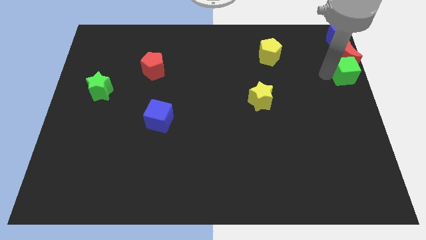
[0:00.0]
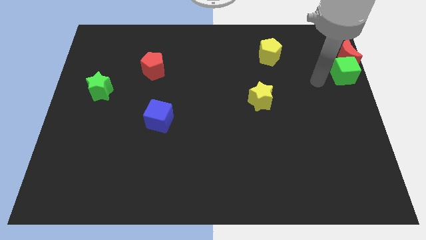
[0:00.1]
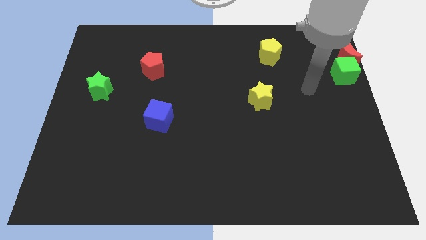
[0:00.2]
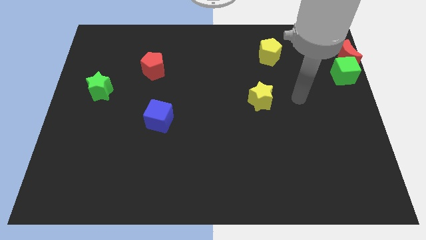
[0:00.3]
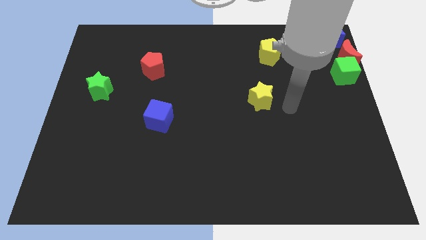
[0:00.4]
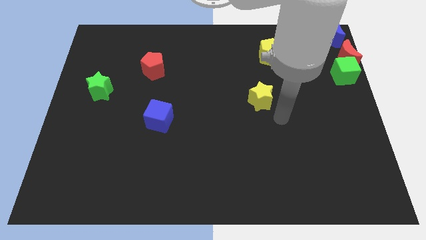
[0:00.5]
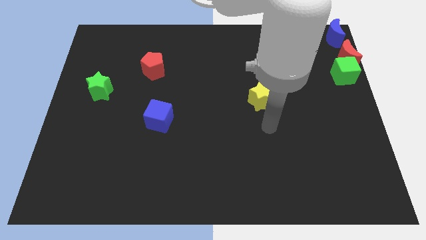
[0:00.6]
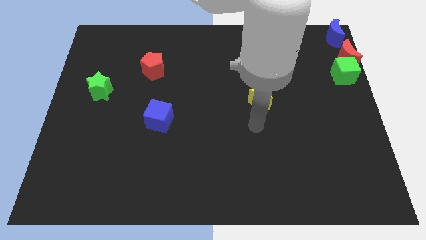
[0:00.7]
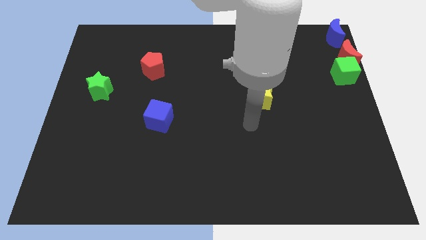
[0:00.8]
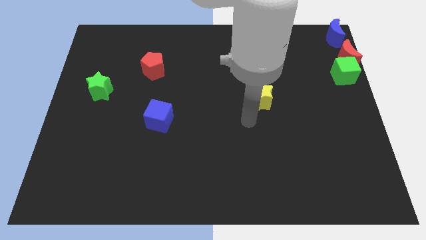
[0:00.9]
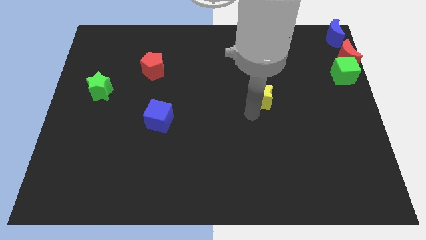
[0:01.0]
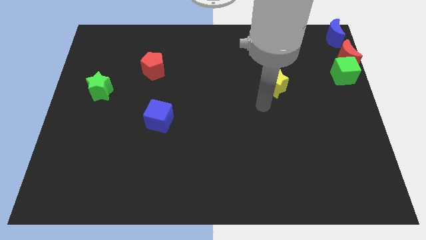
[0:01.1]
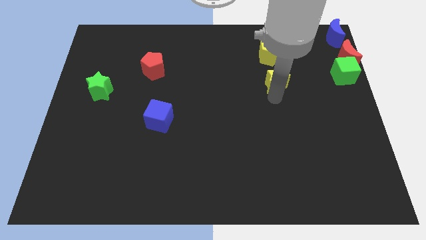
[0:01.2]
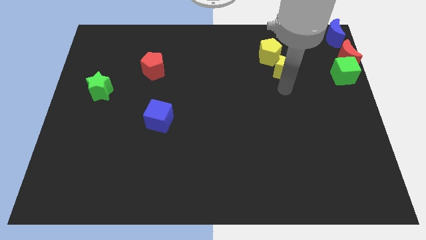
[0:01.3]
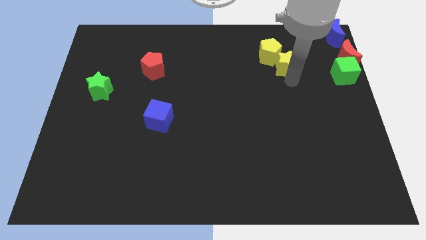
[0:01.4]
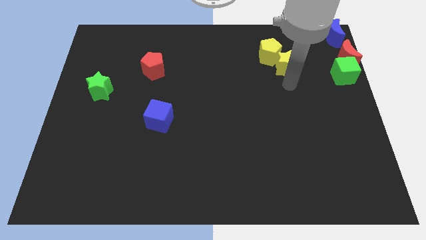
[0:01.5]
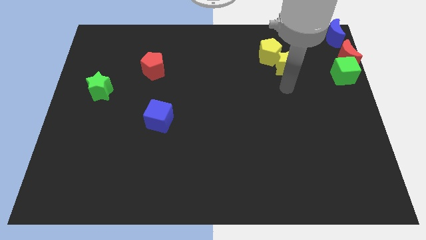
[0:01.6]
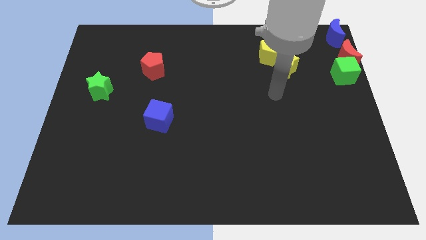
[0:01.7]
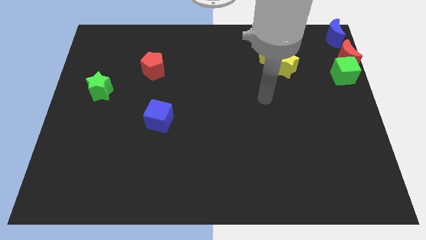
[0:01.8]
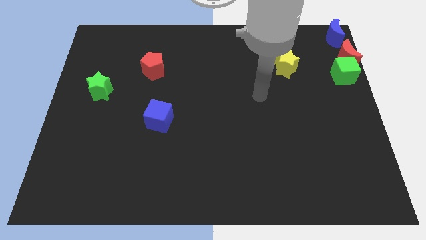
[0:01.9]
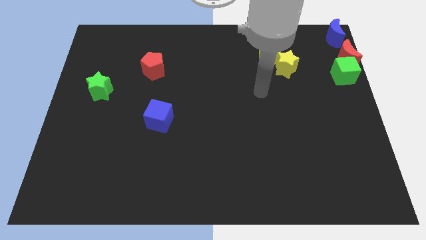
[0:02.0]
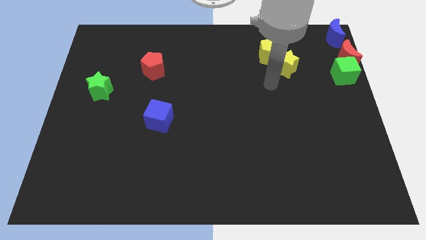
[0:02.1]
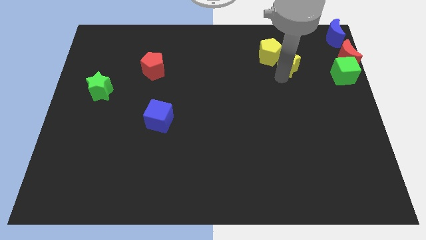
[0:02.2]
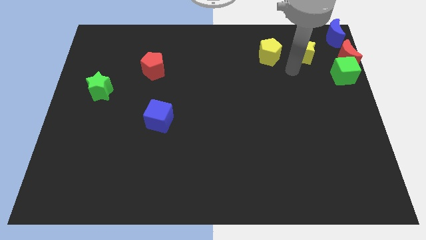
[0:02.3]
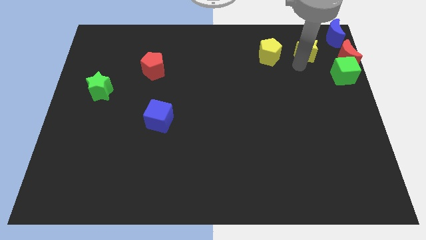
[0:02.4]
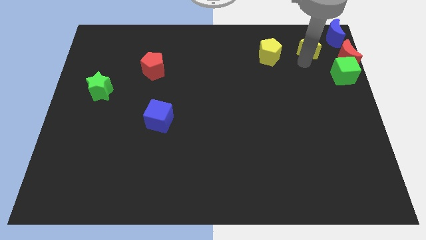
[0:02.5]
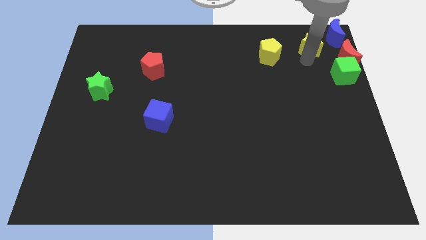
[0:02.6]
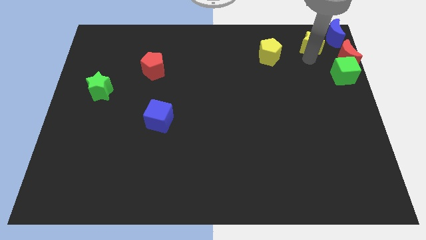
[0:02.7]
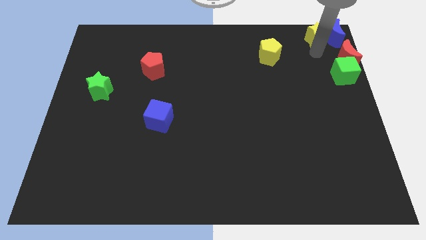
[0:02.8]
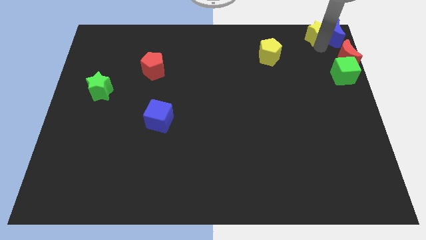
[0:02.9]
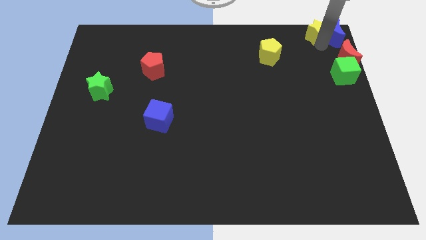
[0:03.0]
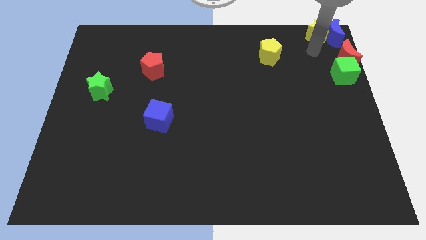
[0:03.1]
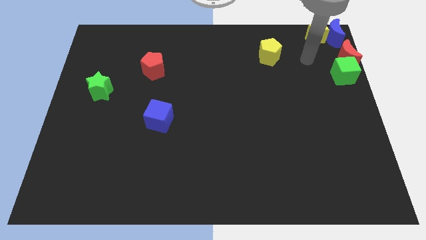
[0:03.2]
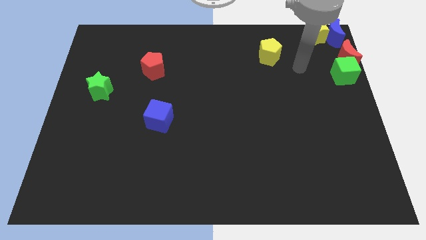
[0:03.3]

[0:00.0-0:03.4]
move the yellow star to the left of the blue moon

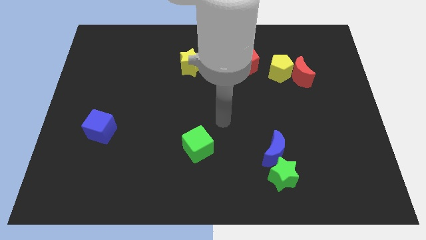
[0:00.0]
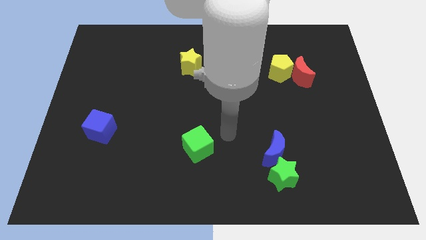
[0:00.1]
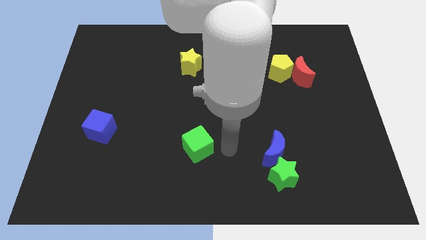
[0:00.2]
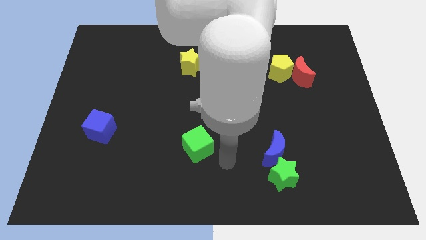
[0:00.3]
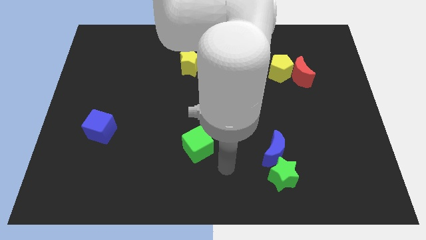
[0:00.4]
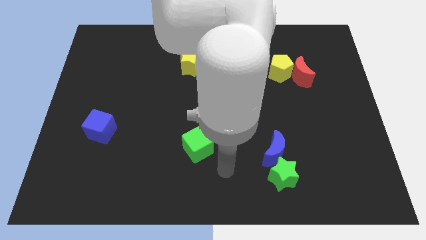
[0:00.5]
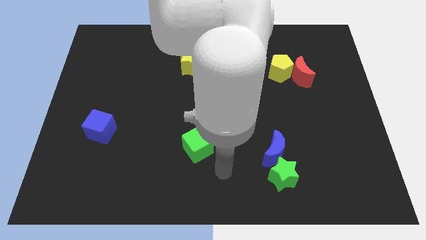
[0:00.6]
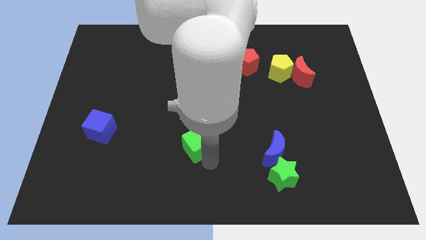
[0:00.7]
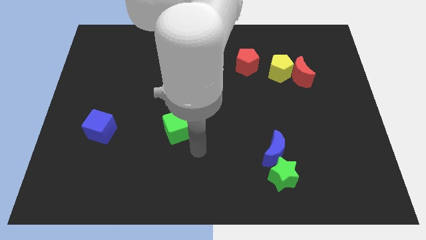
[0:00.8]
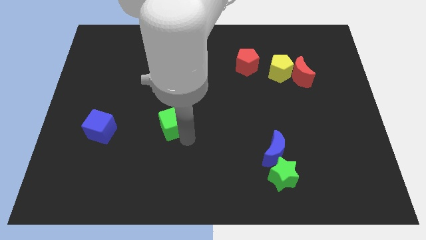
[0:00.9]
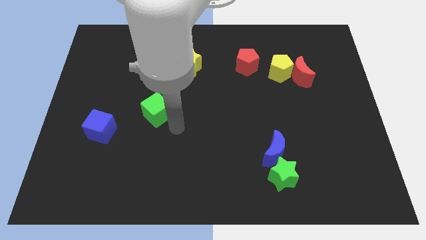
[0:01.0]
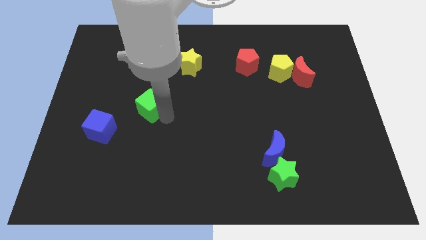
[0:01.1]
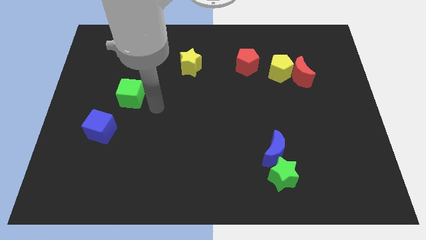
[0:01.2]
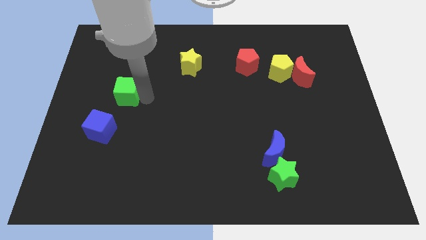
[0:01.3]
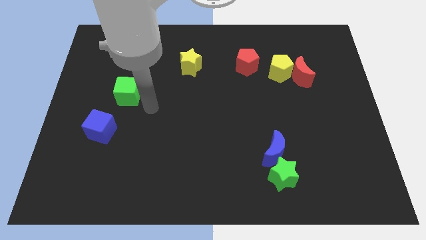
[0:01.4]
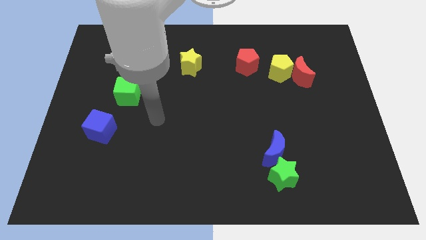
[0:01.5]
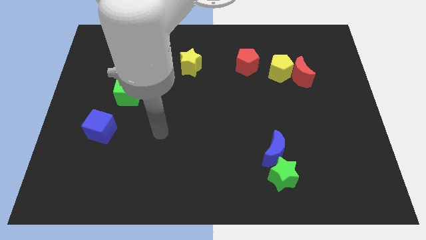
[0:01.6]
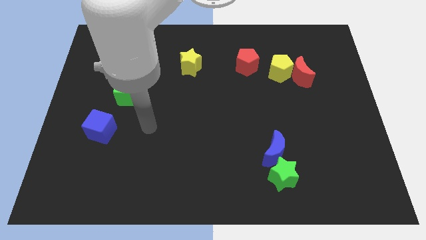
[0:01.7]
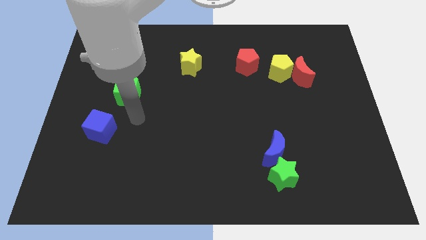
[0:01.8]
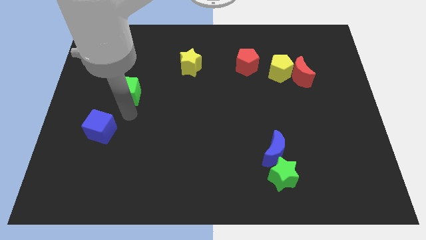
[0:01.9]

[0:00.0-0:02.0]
move the green cube towards the left center of the board

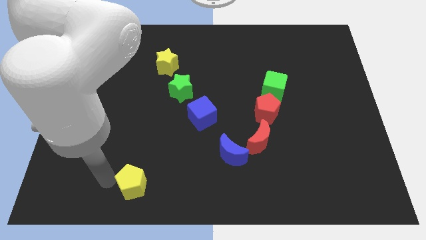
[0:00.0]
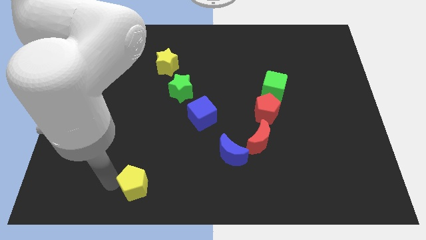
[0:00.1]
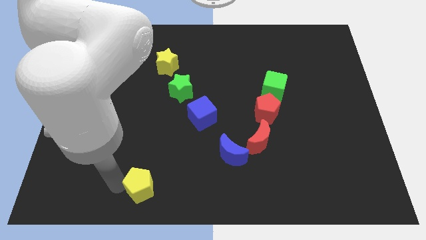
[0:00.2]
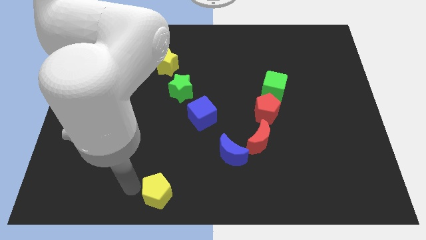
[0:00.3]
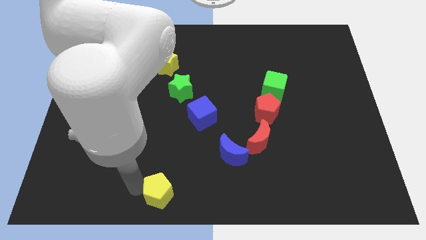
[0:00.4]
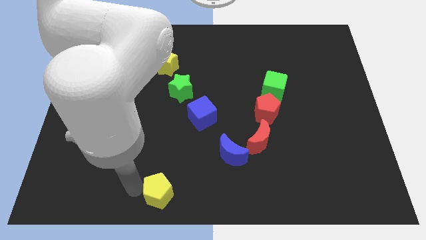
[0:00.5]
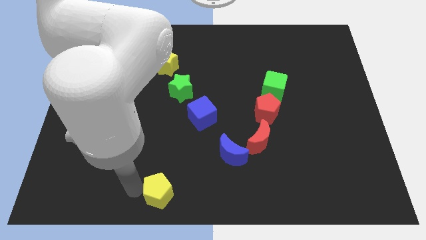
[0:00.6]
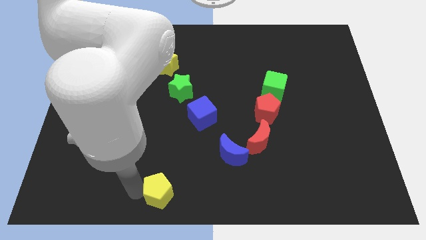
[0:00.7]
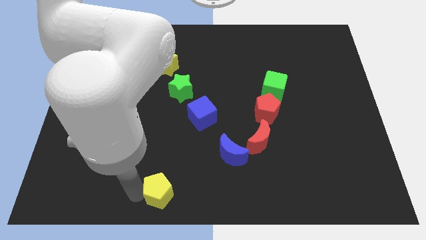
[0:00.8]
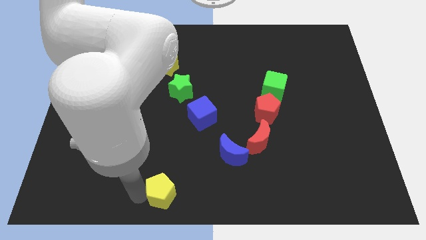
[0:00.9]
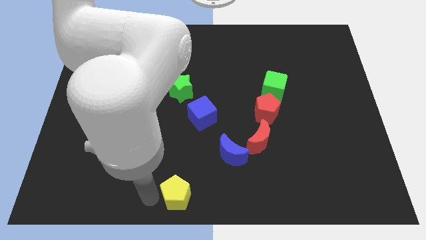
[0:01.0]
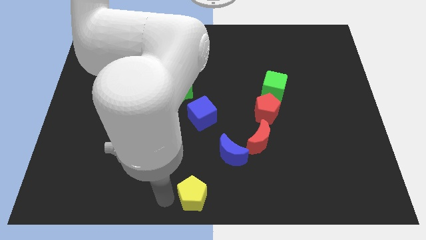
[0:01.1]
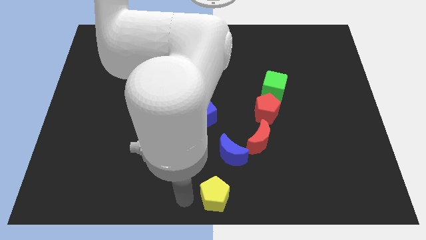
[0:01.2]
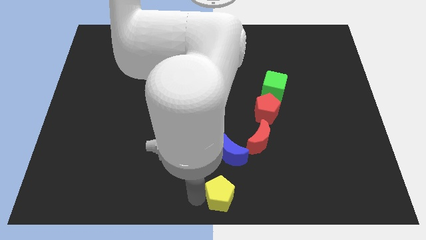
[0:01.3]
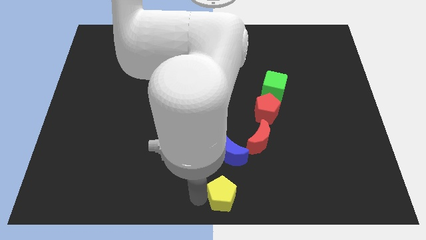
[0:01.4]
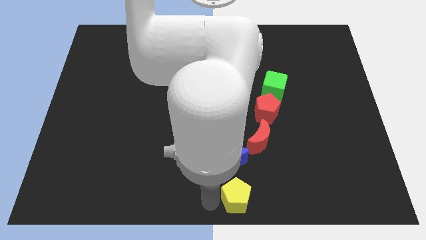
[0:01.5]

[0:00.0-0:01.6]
place the yellow pentagon at the bottom center of the board

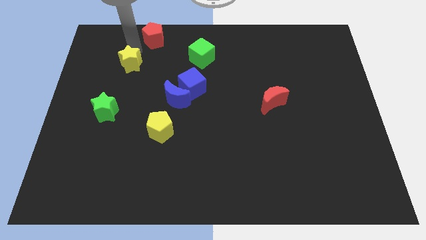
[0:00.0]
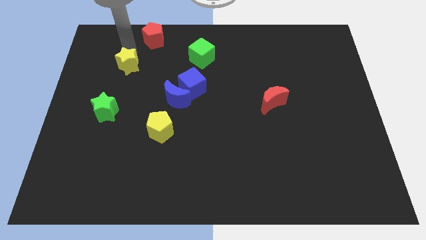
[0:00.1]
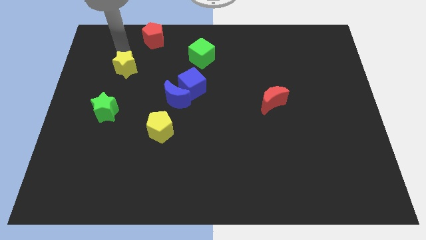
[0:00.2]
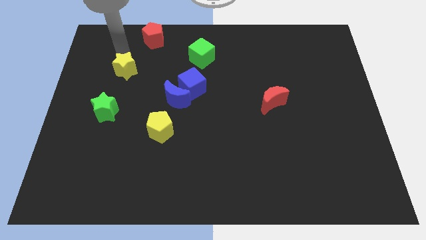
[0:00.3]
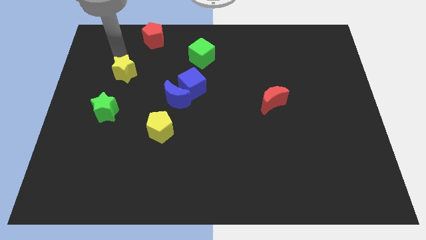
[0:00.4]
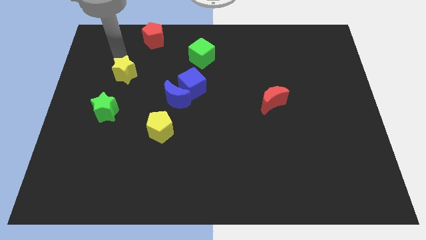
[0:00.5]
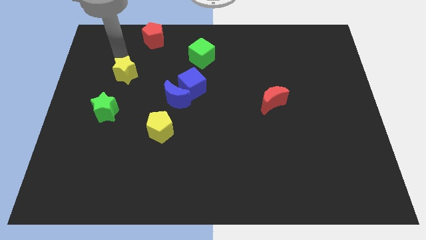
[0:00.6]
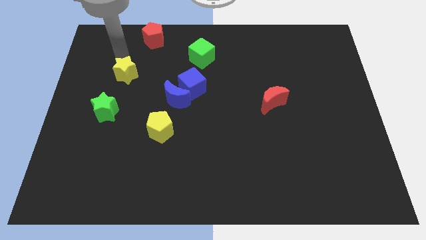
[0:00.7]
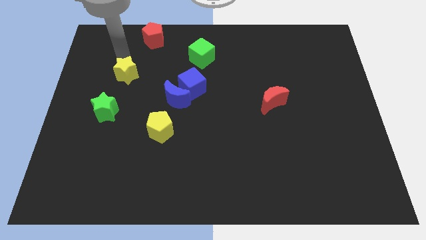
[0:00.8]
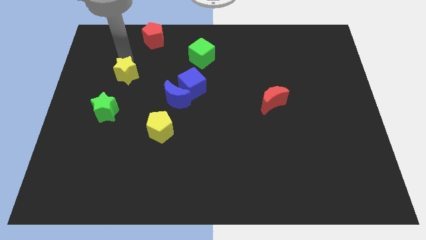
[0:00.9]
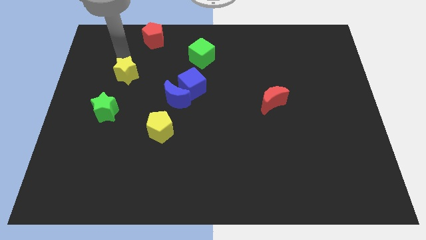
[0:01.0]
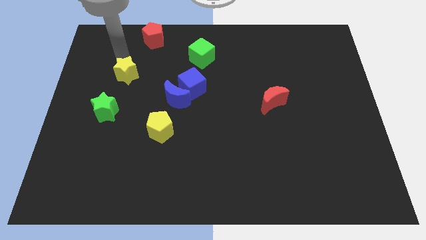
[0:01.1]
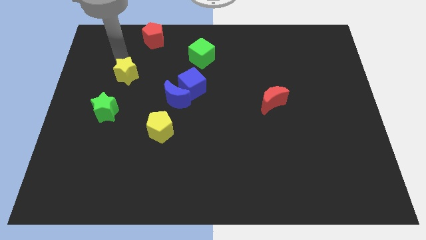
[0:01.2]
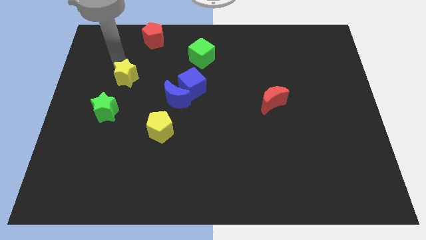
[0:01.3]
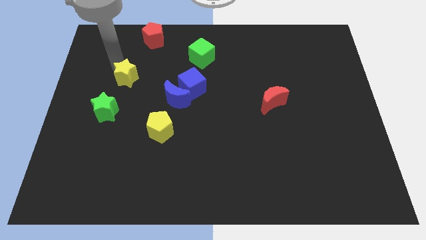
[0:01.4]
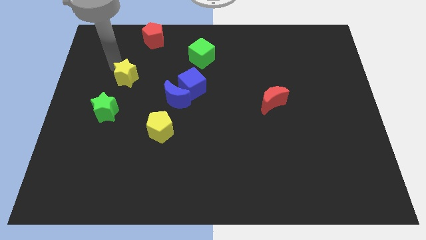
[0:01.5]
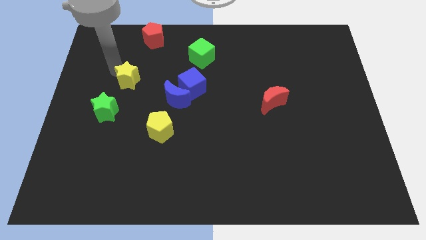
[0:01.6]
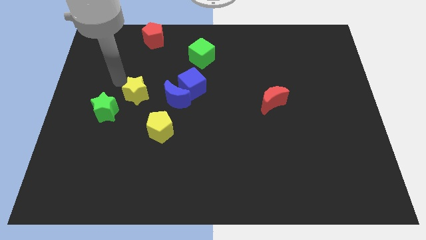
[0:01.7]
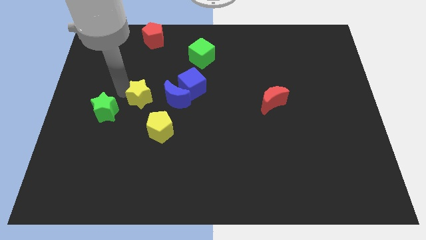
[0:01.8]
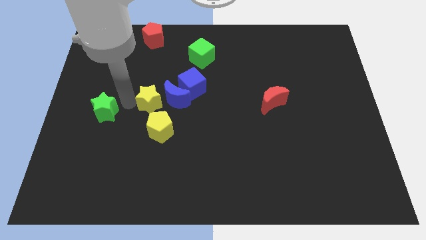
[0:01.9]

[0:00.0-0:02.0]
push the yellow star towards yellow pentagon
